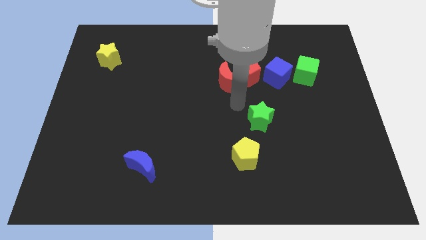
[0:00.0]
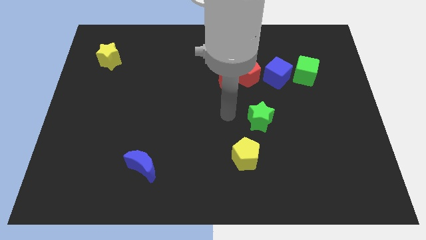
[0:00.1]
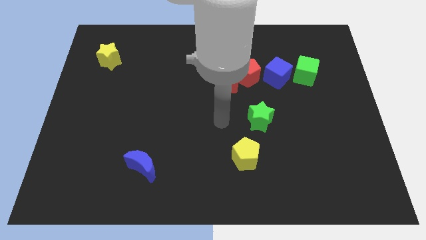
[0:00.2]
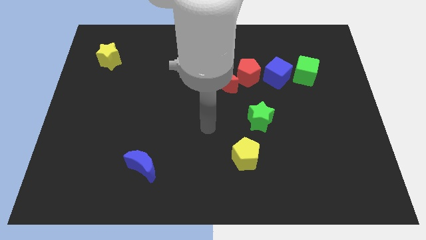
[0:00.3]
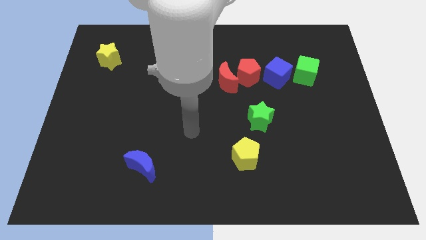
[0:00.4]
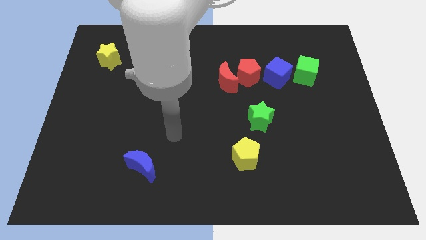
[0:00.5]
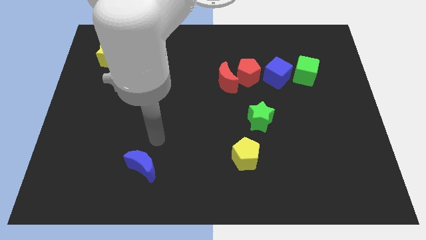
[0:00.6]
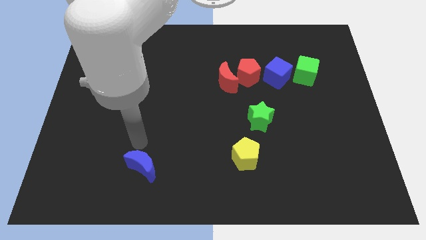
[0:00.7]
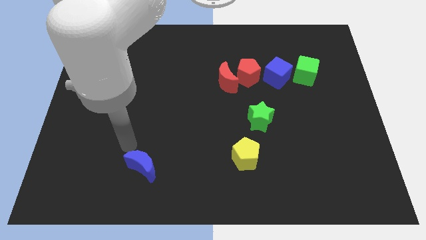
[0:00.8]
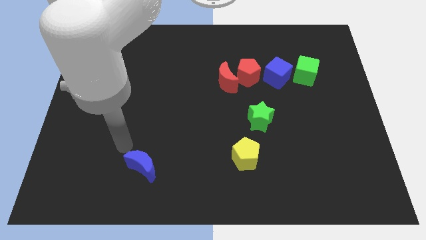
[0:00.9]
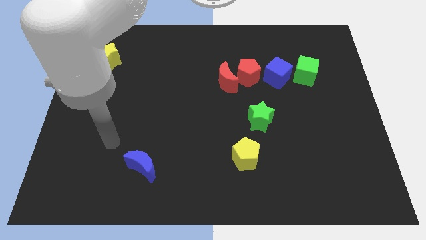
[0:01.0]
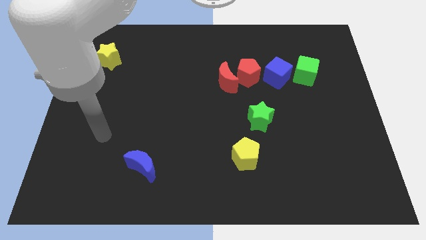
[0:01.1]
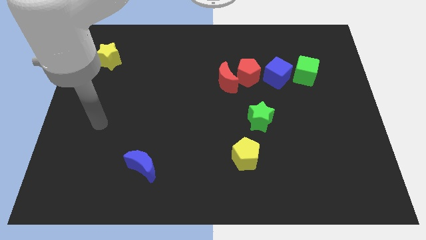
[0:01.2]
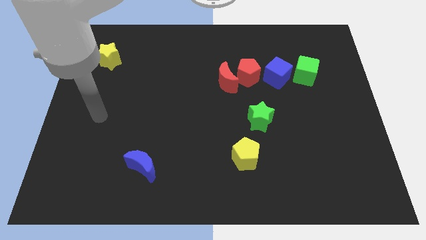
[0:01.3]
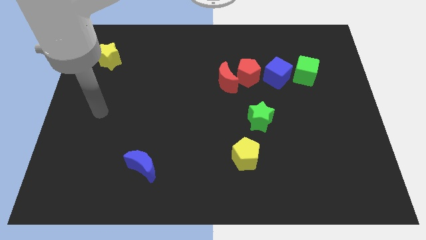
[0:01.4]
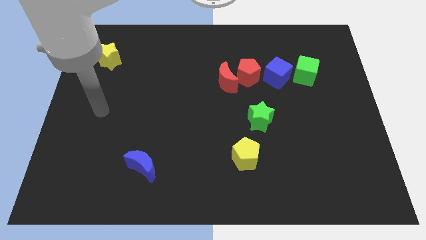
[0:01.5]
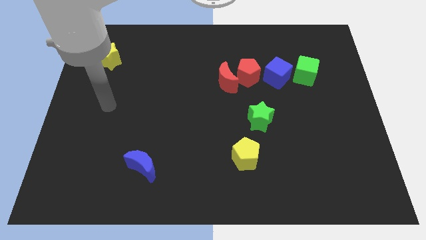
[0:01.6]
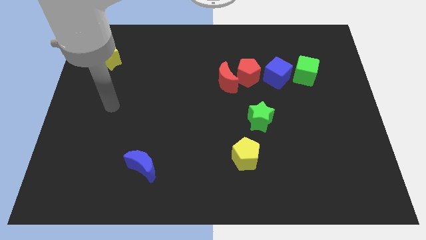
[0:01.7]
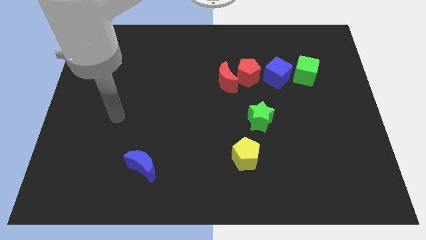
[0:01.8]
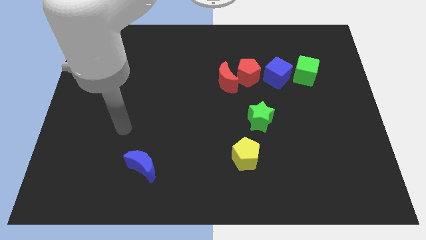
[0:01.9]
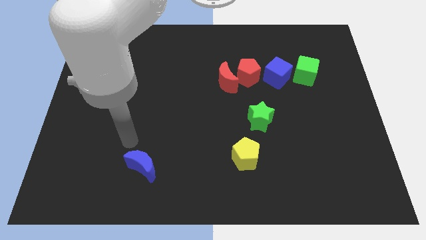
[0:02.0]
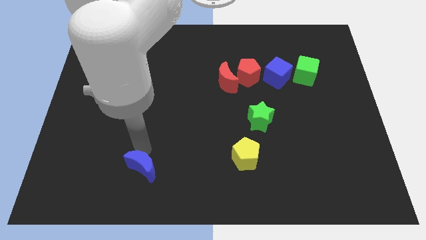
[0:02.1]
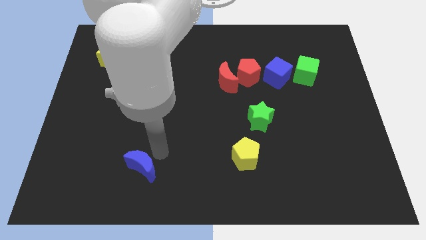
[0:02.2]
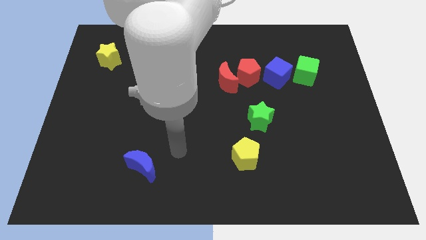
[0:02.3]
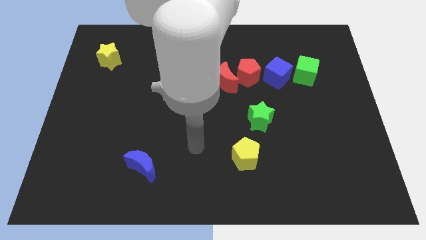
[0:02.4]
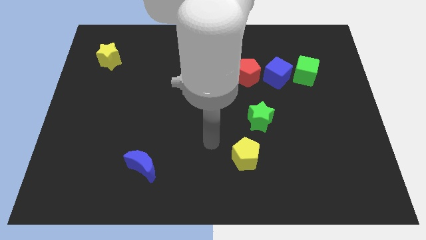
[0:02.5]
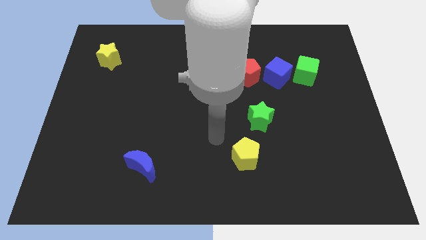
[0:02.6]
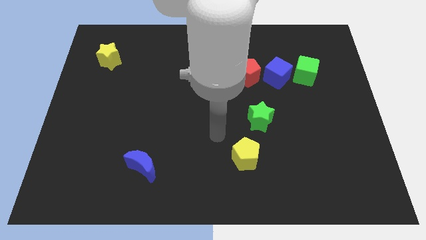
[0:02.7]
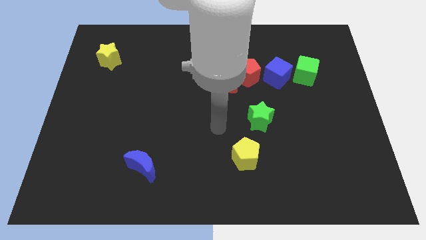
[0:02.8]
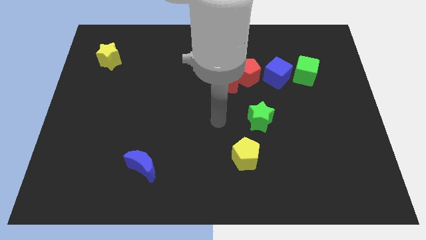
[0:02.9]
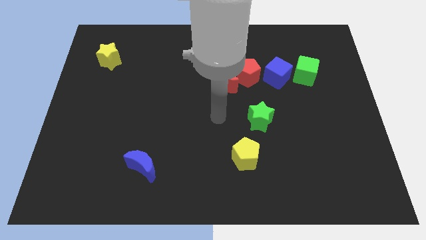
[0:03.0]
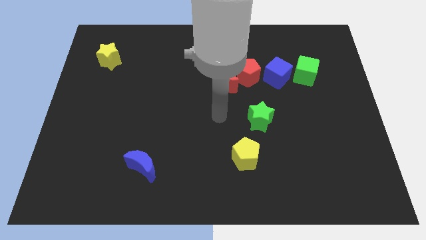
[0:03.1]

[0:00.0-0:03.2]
move your arm left to the green star

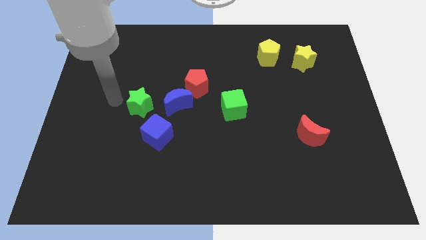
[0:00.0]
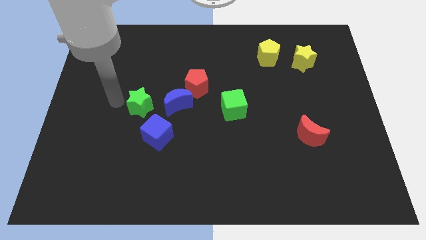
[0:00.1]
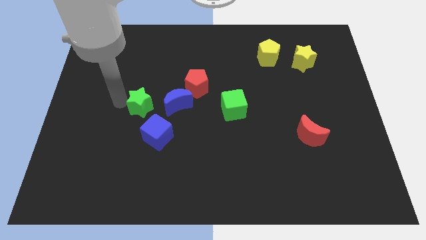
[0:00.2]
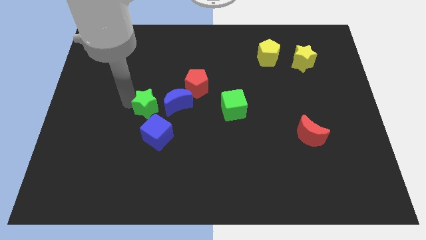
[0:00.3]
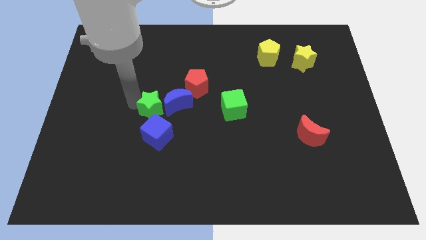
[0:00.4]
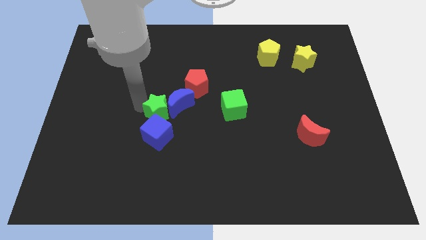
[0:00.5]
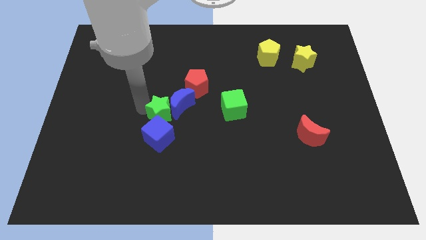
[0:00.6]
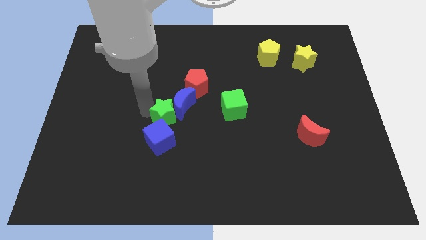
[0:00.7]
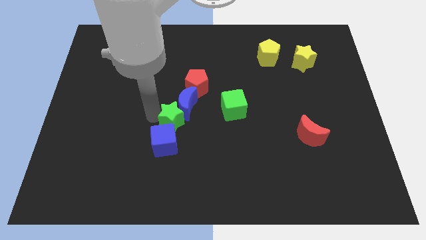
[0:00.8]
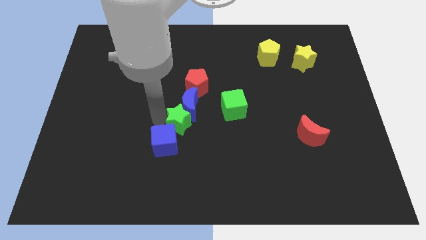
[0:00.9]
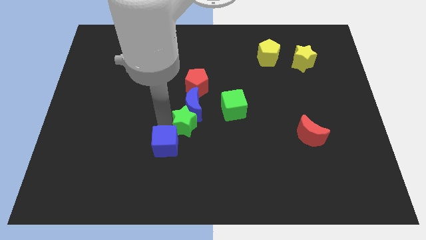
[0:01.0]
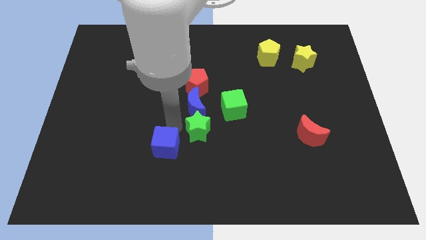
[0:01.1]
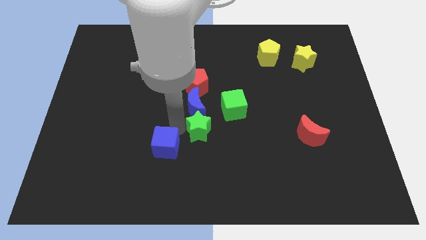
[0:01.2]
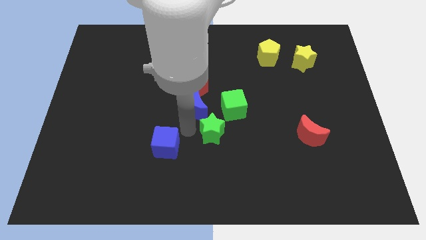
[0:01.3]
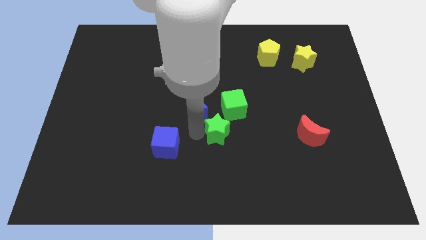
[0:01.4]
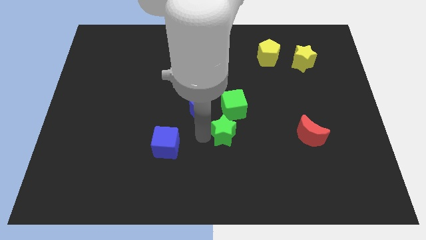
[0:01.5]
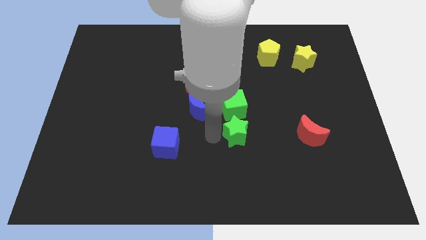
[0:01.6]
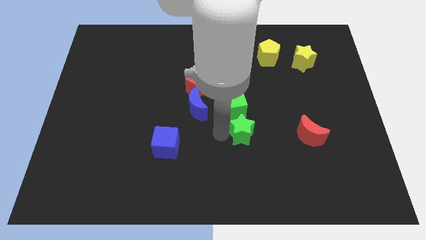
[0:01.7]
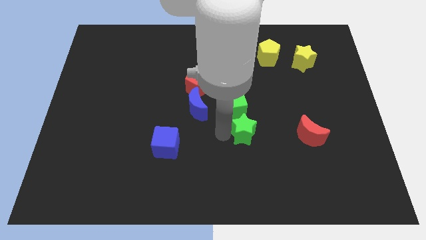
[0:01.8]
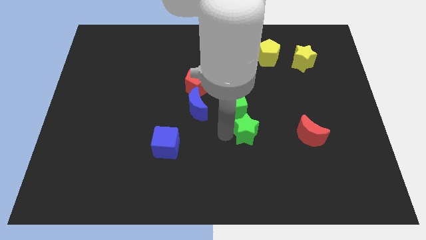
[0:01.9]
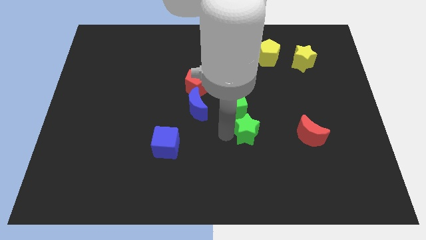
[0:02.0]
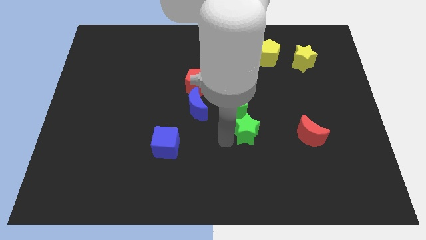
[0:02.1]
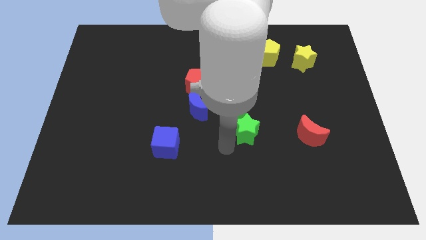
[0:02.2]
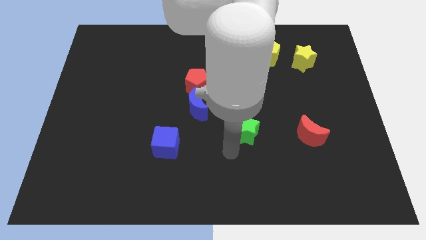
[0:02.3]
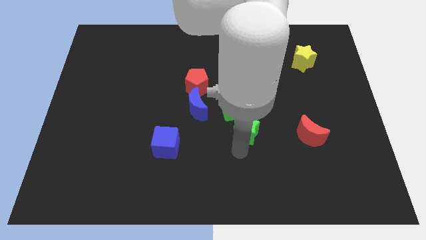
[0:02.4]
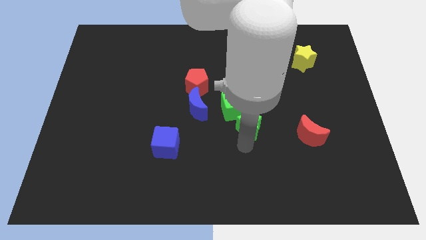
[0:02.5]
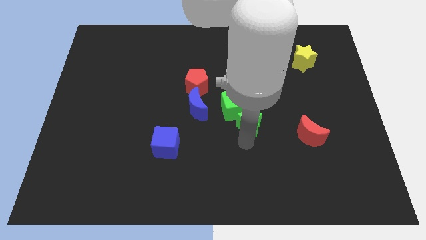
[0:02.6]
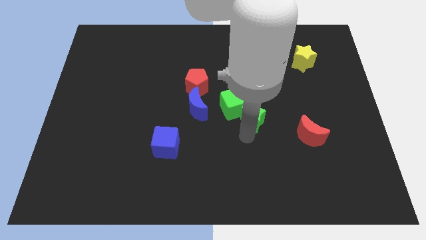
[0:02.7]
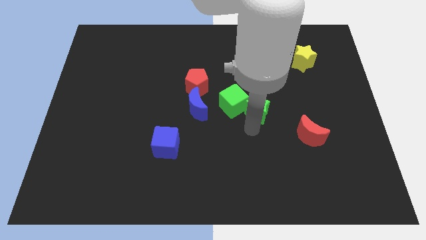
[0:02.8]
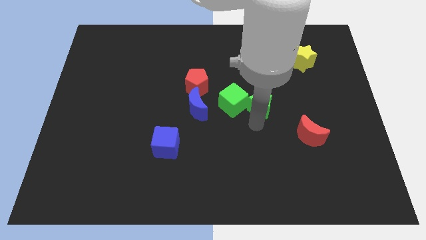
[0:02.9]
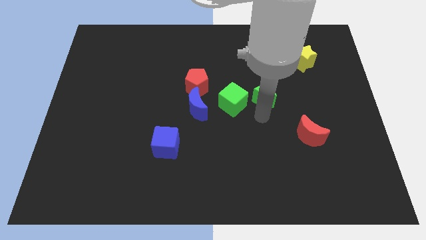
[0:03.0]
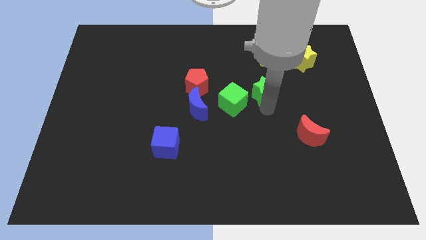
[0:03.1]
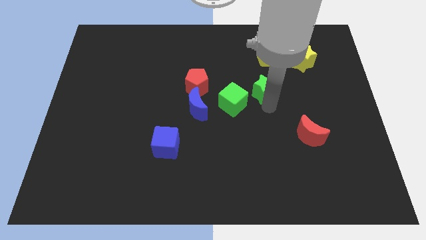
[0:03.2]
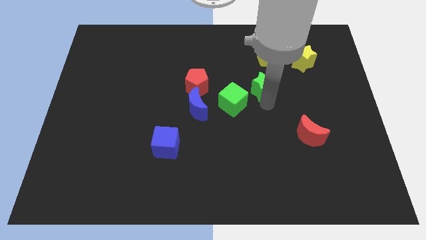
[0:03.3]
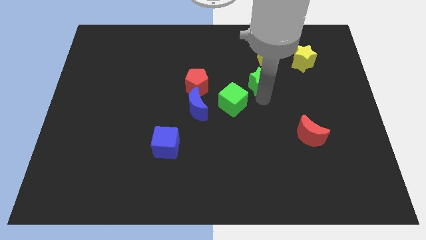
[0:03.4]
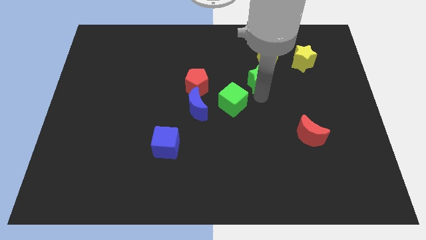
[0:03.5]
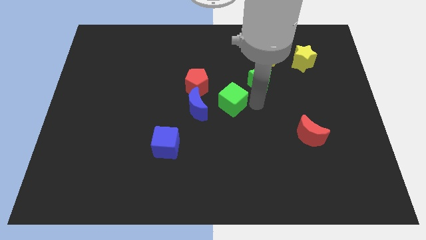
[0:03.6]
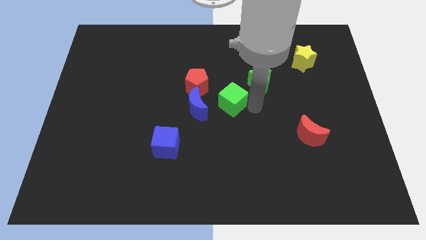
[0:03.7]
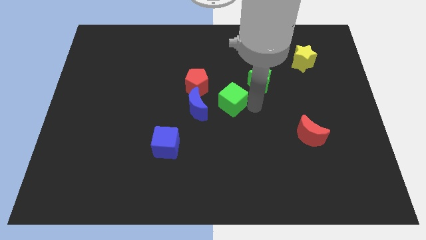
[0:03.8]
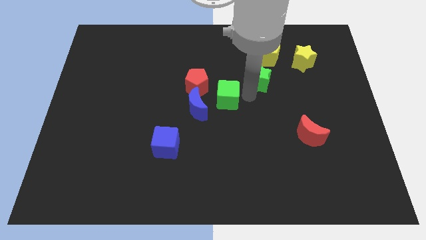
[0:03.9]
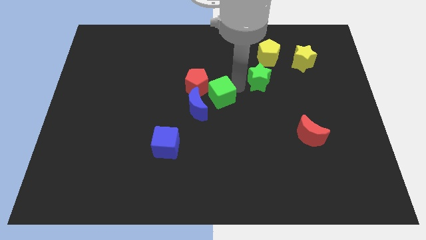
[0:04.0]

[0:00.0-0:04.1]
slide the green star towards the bottom side of the yellow pentagon

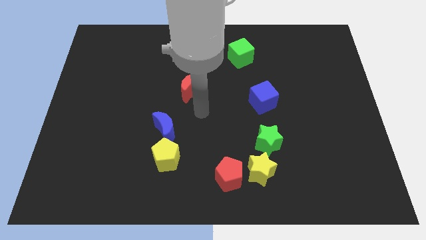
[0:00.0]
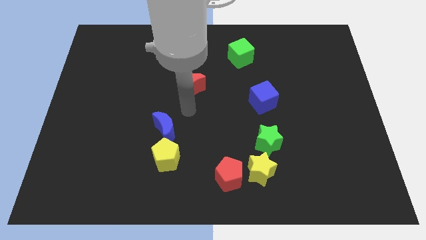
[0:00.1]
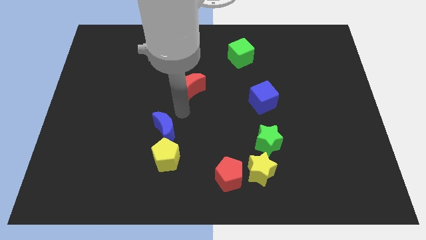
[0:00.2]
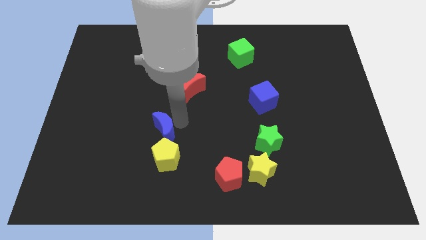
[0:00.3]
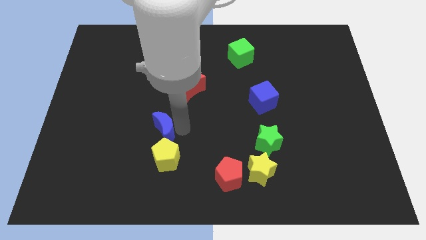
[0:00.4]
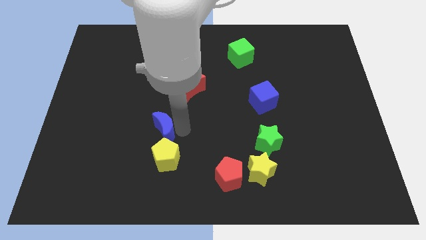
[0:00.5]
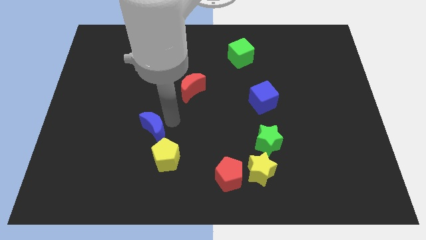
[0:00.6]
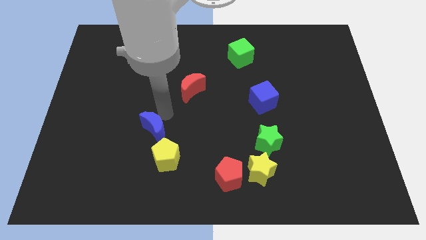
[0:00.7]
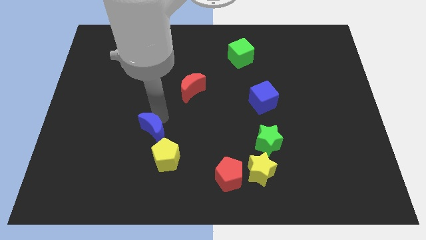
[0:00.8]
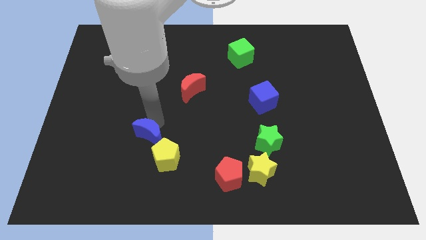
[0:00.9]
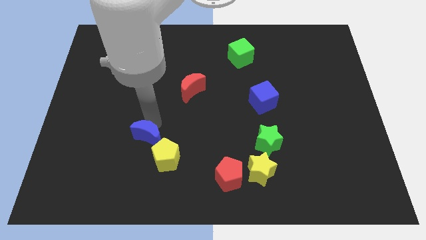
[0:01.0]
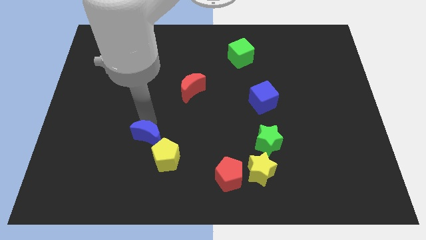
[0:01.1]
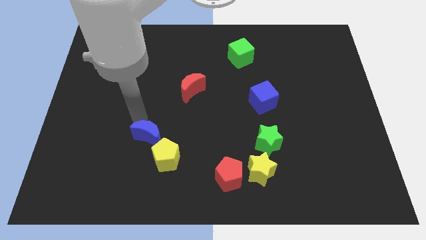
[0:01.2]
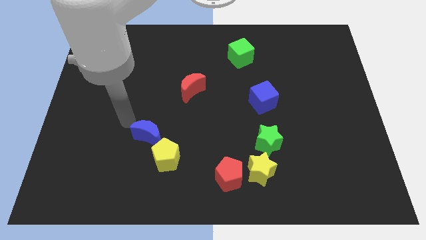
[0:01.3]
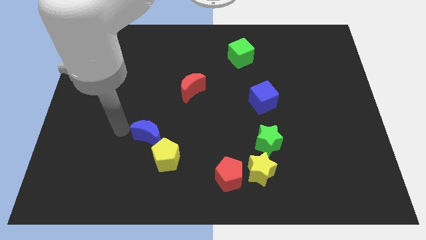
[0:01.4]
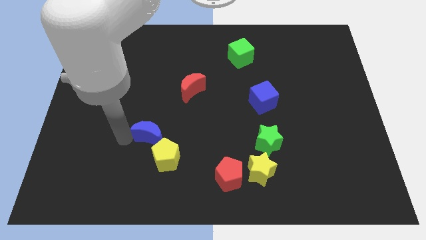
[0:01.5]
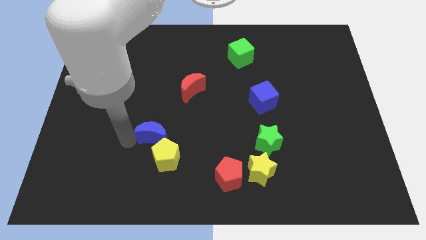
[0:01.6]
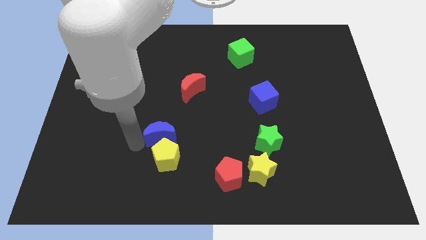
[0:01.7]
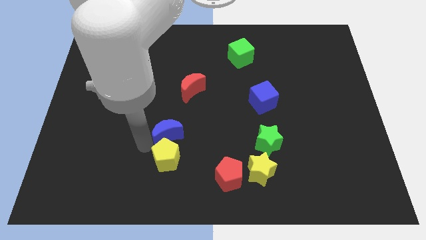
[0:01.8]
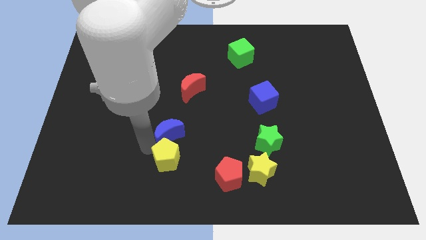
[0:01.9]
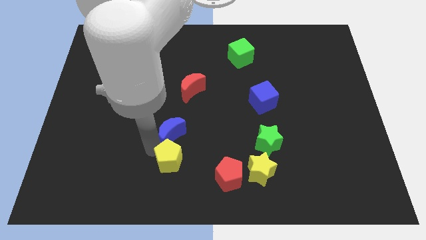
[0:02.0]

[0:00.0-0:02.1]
place the blue moon to the top of yellow pentagon
